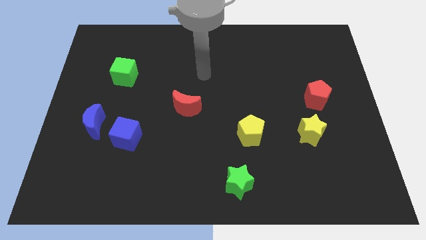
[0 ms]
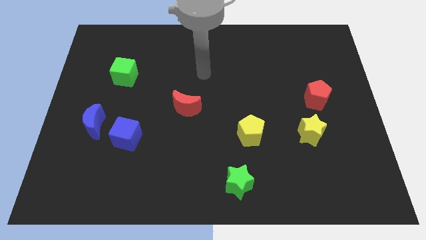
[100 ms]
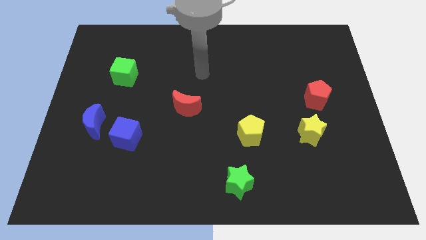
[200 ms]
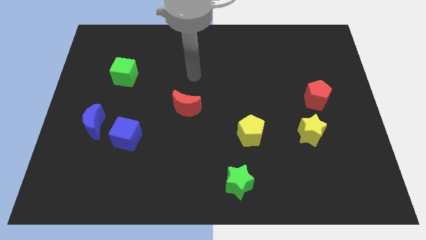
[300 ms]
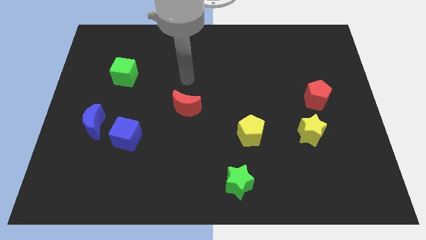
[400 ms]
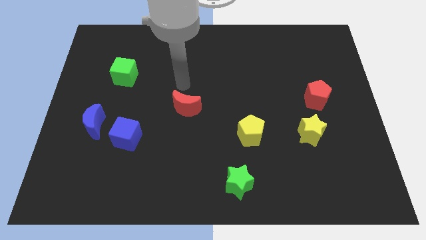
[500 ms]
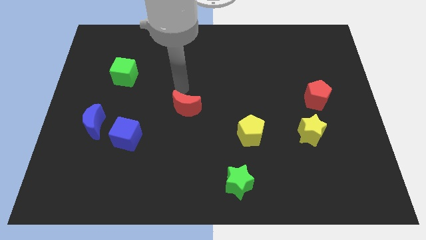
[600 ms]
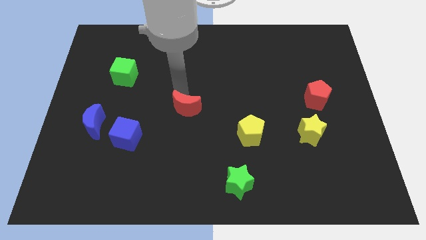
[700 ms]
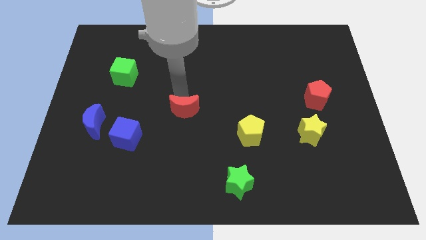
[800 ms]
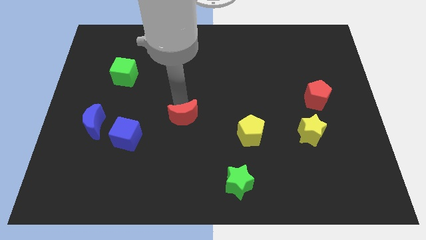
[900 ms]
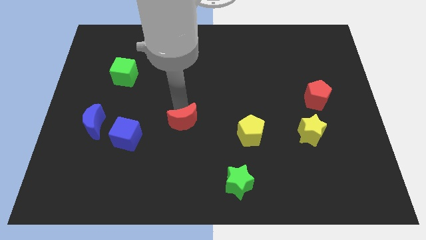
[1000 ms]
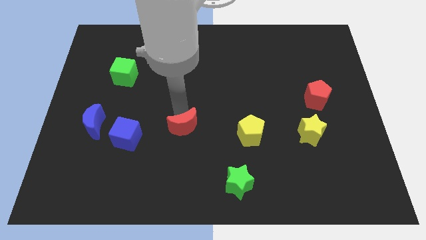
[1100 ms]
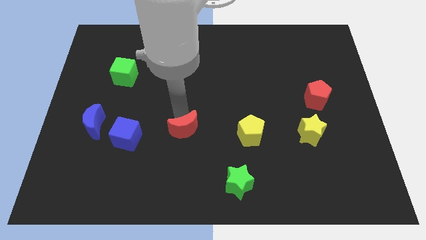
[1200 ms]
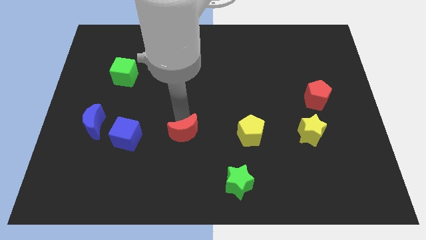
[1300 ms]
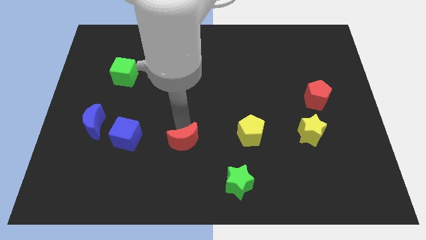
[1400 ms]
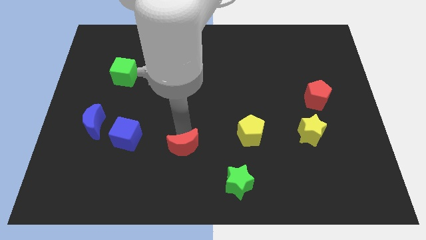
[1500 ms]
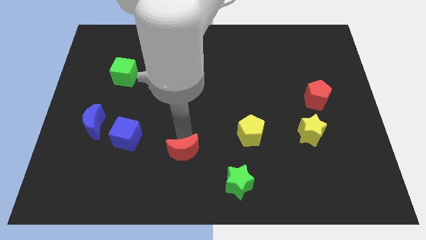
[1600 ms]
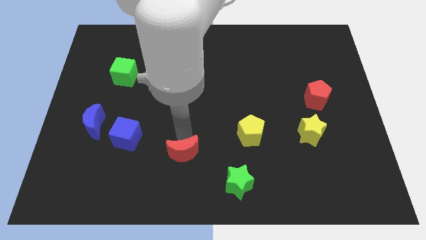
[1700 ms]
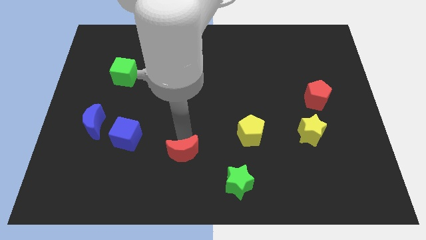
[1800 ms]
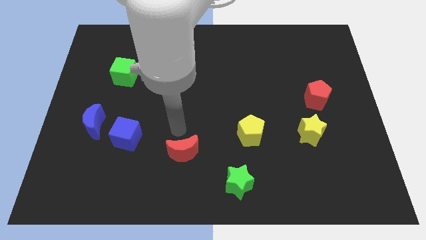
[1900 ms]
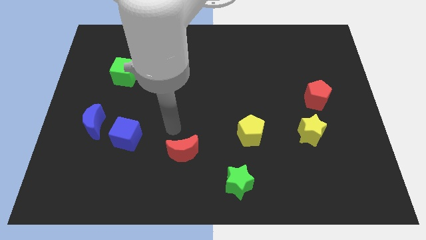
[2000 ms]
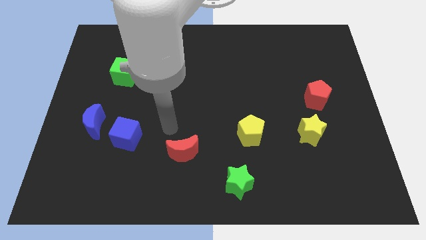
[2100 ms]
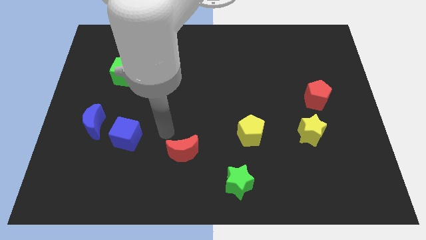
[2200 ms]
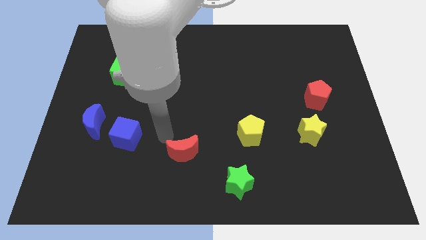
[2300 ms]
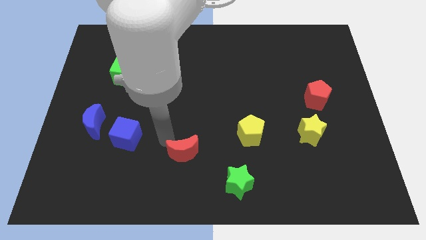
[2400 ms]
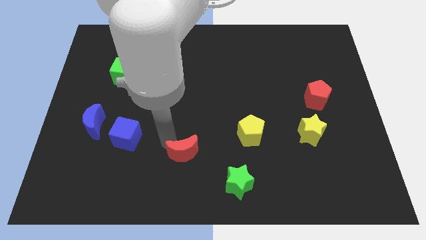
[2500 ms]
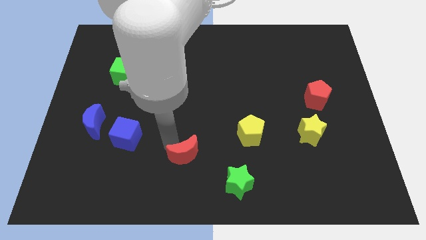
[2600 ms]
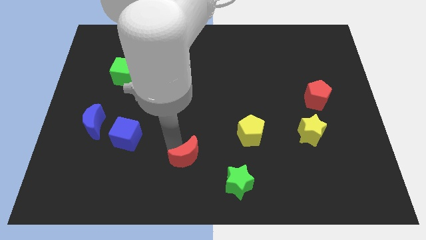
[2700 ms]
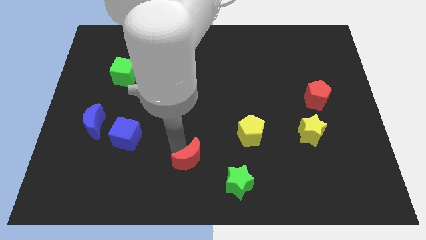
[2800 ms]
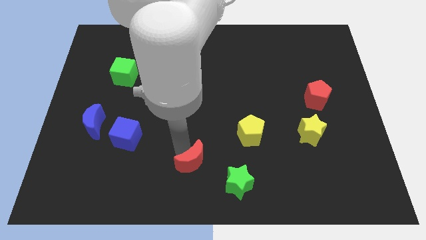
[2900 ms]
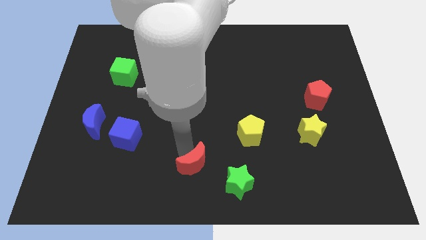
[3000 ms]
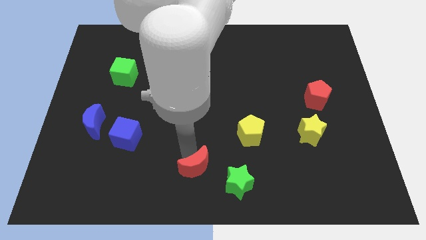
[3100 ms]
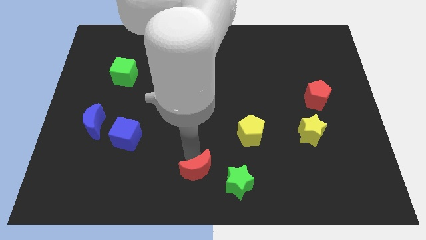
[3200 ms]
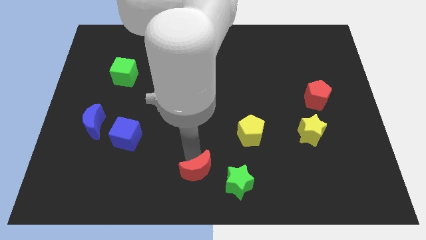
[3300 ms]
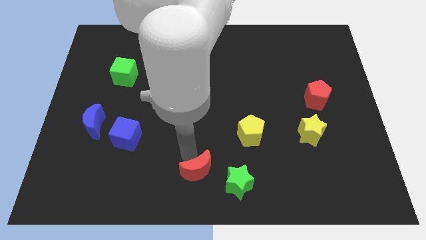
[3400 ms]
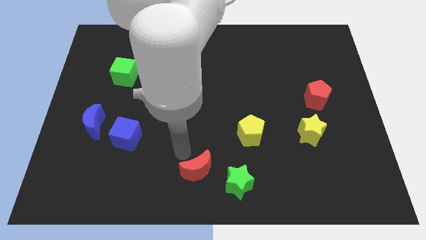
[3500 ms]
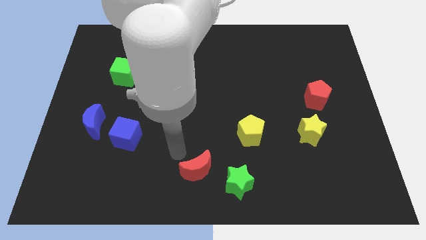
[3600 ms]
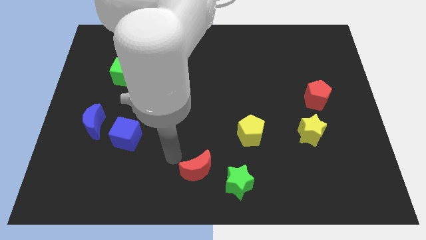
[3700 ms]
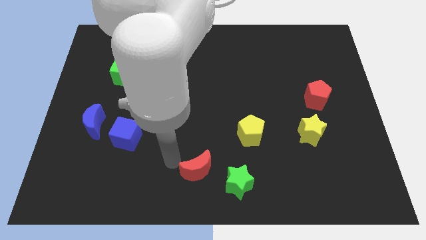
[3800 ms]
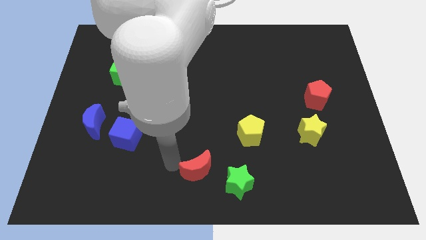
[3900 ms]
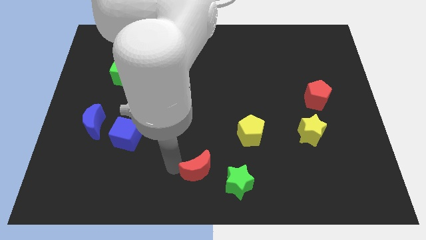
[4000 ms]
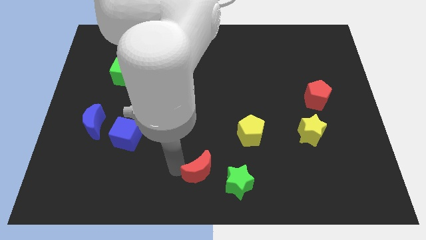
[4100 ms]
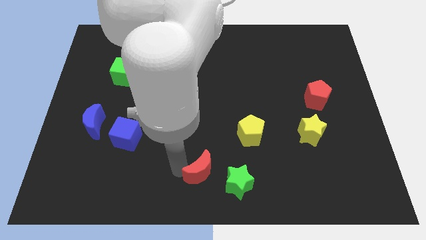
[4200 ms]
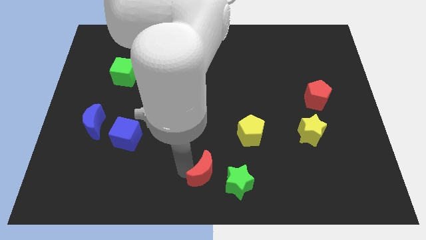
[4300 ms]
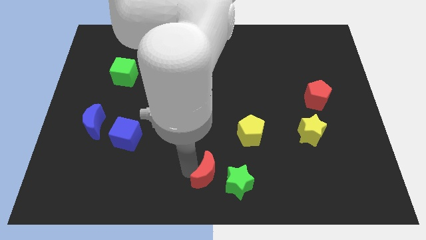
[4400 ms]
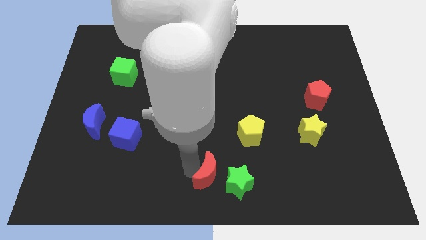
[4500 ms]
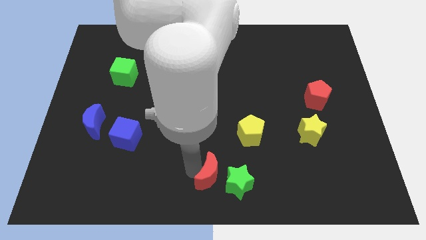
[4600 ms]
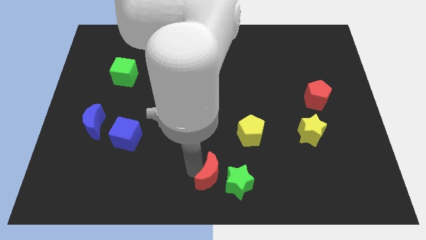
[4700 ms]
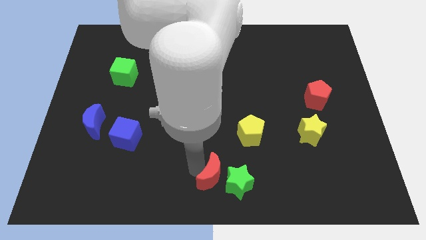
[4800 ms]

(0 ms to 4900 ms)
slide the red moon close to the green star

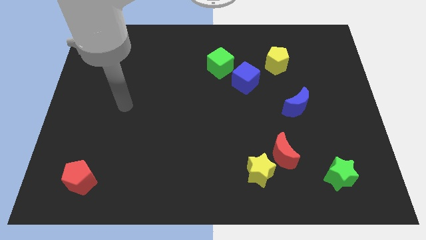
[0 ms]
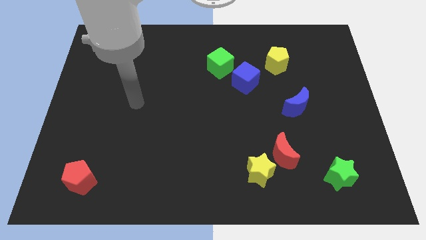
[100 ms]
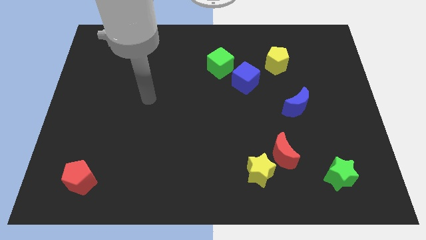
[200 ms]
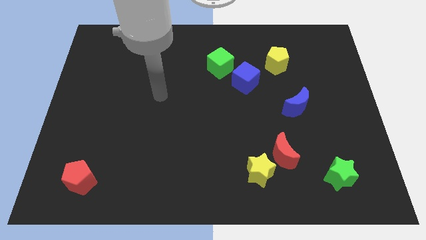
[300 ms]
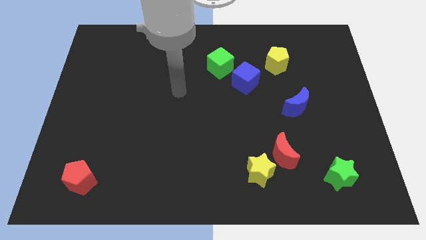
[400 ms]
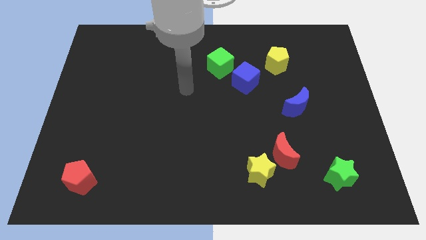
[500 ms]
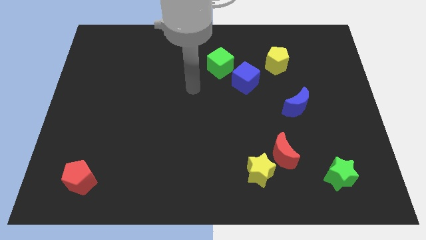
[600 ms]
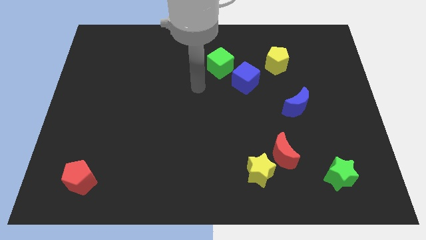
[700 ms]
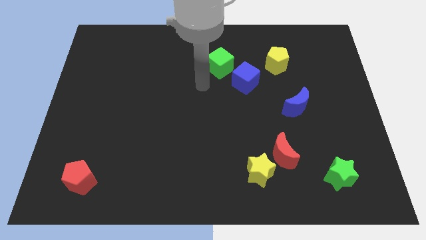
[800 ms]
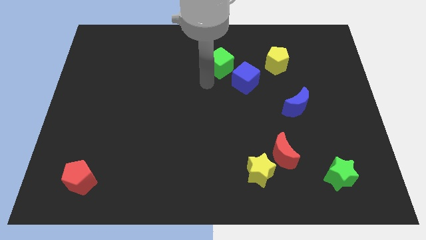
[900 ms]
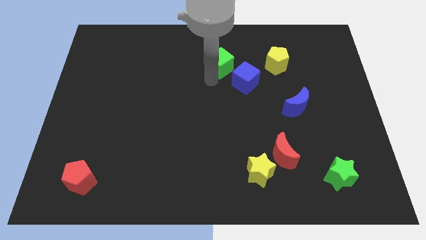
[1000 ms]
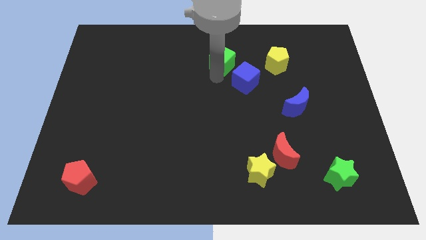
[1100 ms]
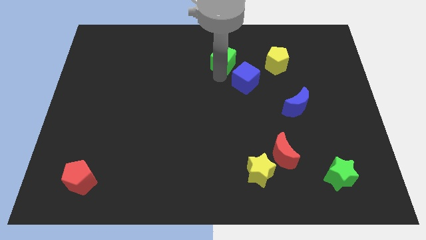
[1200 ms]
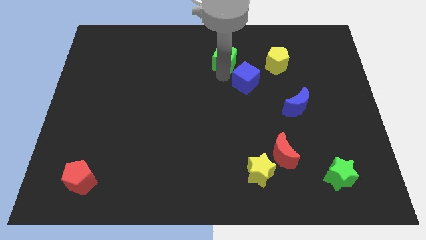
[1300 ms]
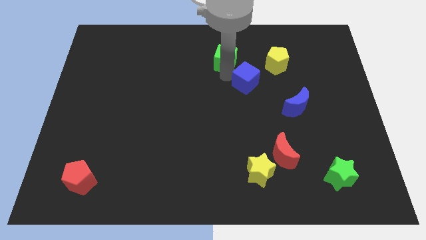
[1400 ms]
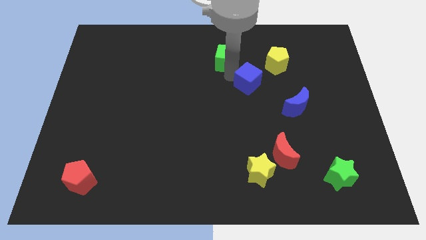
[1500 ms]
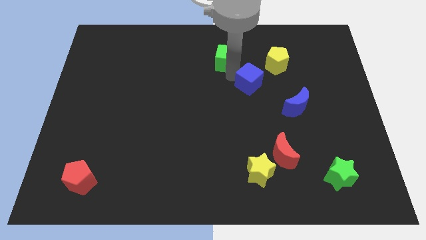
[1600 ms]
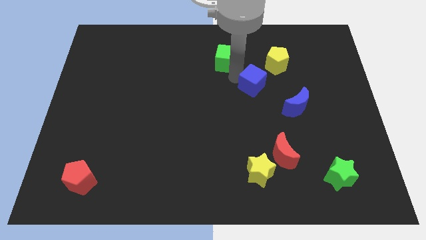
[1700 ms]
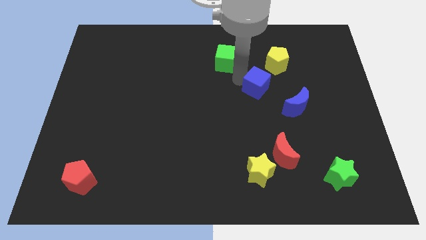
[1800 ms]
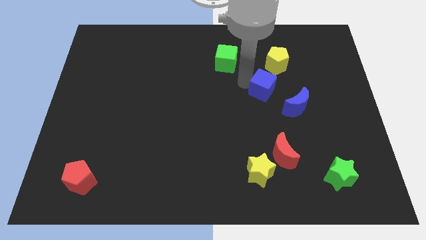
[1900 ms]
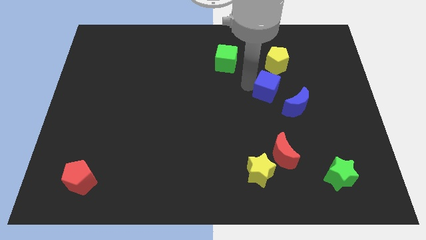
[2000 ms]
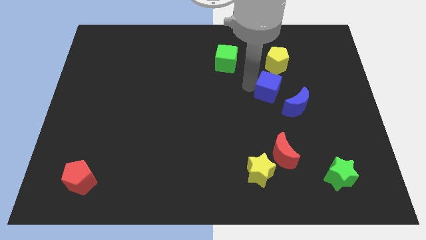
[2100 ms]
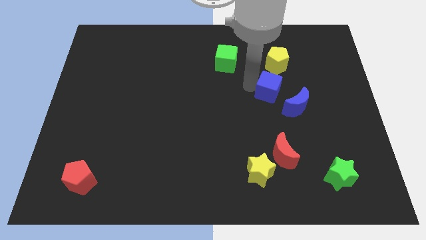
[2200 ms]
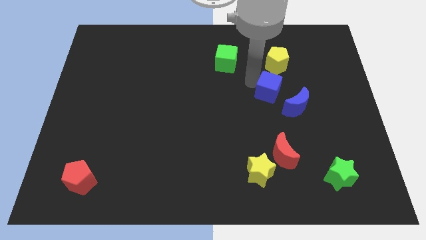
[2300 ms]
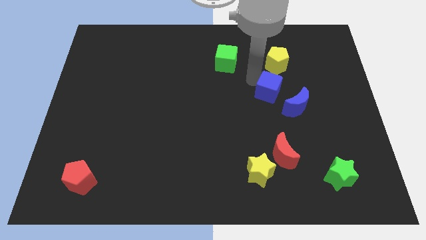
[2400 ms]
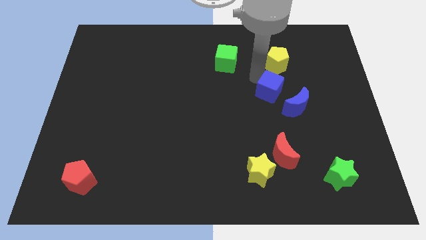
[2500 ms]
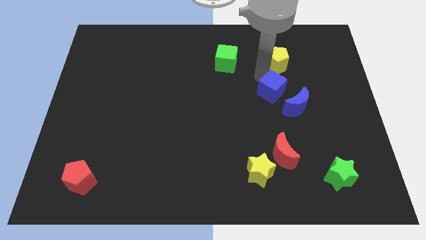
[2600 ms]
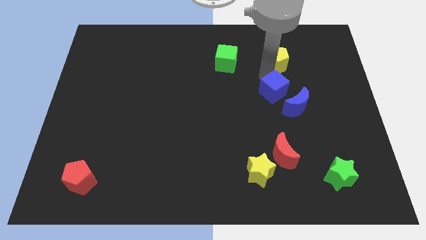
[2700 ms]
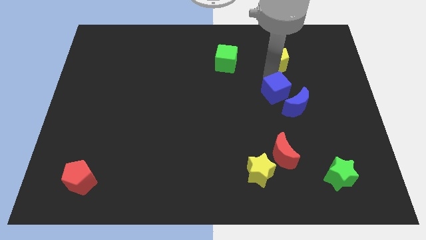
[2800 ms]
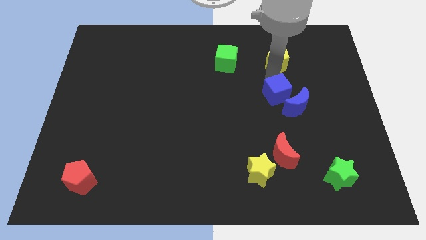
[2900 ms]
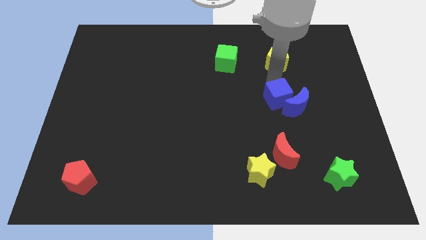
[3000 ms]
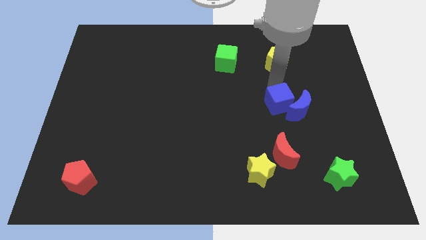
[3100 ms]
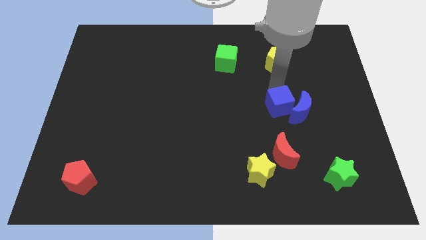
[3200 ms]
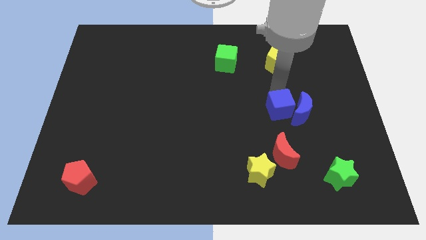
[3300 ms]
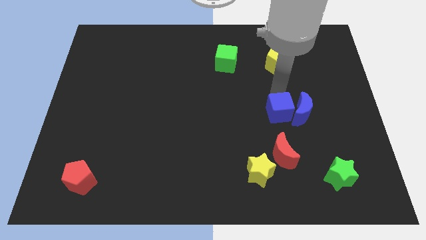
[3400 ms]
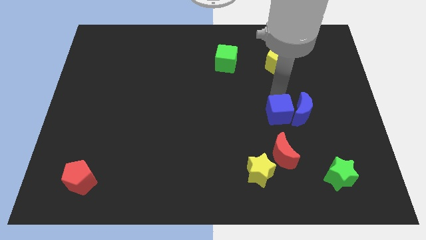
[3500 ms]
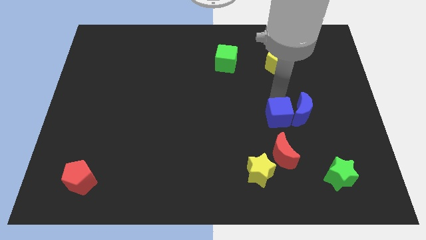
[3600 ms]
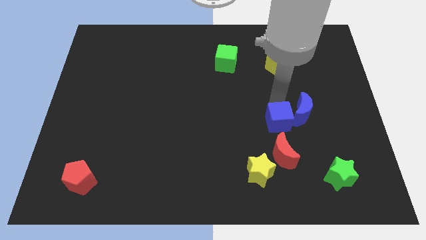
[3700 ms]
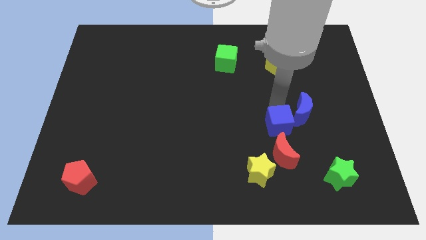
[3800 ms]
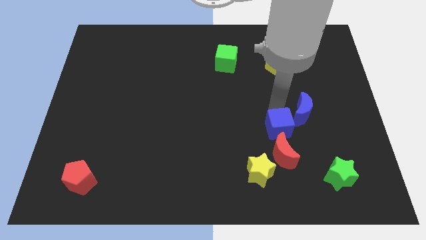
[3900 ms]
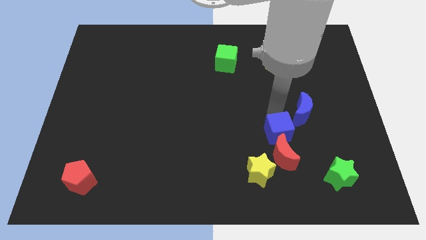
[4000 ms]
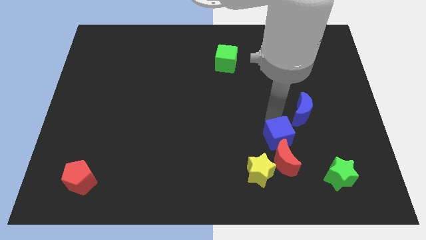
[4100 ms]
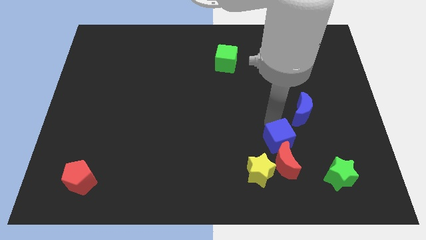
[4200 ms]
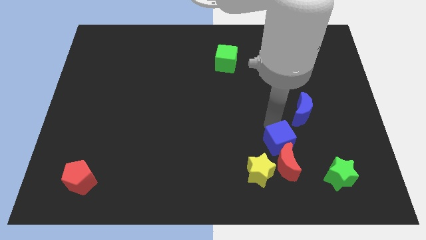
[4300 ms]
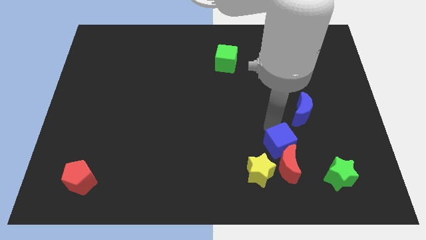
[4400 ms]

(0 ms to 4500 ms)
push the blue cube close to the red moon
